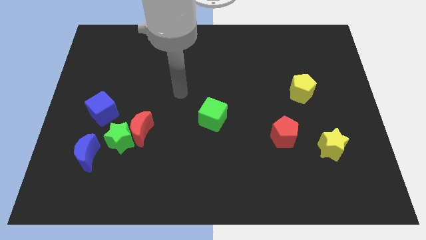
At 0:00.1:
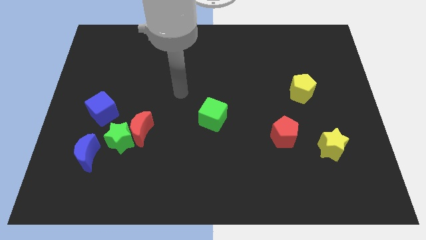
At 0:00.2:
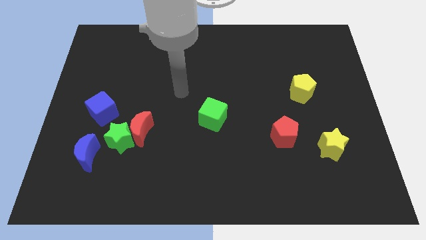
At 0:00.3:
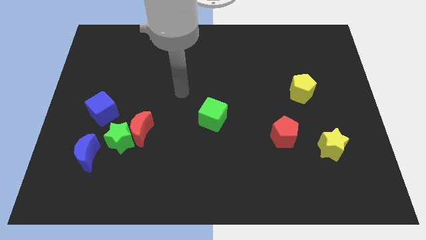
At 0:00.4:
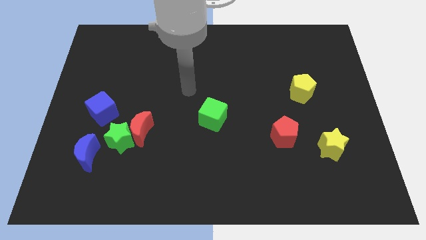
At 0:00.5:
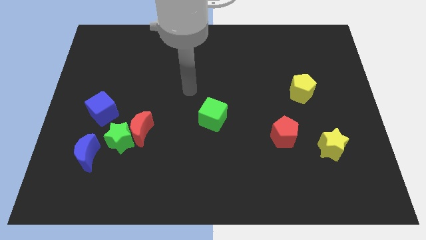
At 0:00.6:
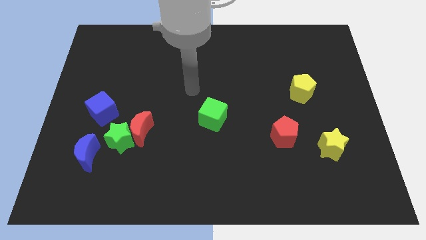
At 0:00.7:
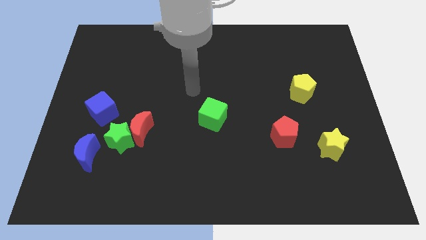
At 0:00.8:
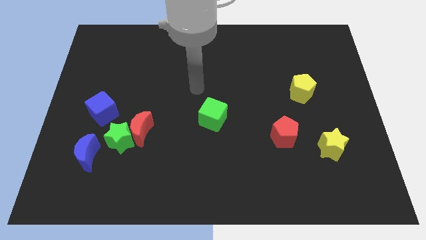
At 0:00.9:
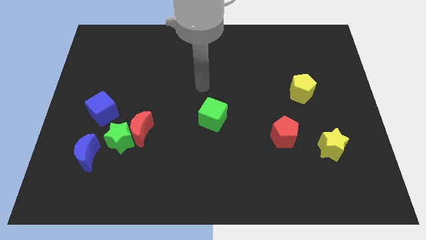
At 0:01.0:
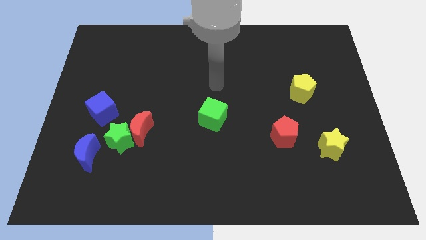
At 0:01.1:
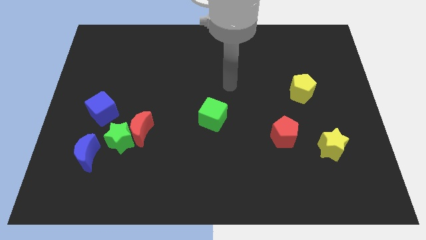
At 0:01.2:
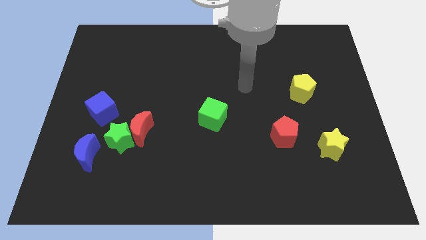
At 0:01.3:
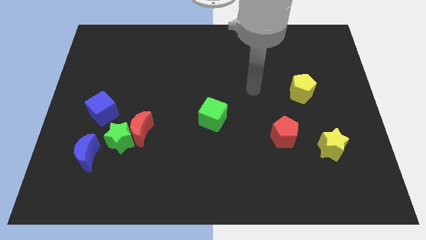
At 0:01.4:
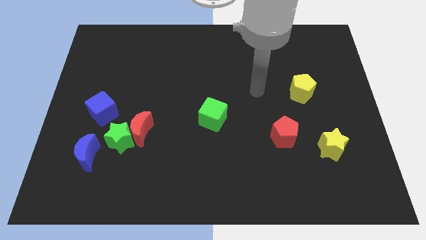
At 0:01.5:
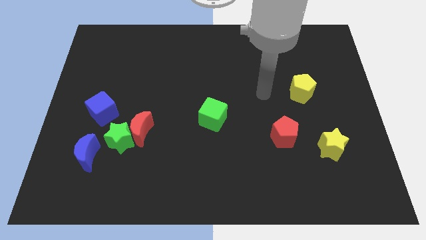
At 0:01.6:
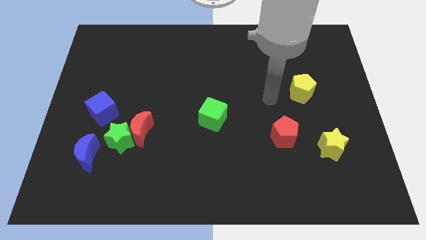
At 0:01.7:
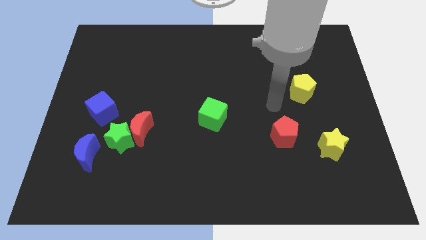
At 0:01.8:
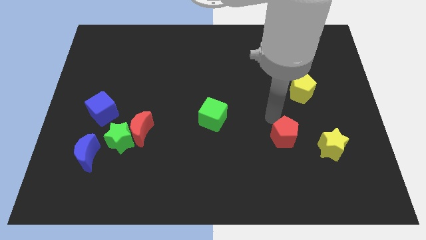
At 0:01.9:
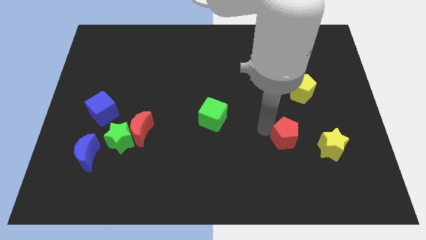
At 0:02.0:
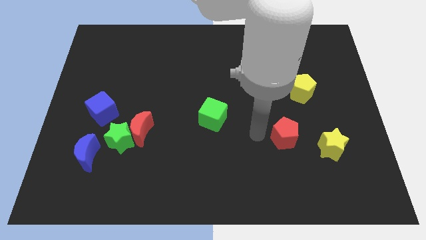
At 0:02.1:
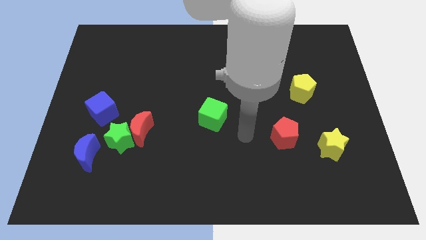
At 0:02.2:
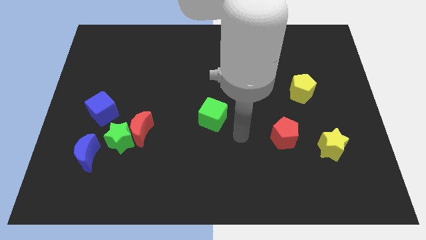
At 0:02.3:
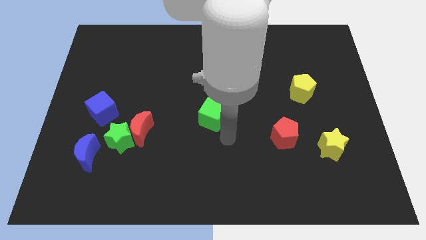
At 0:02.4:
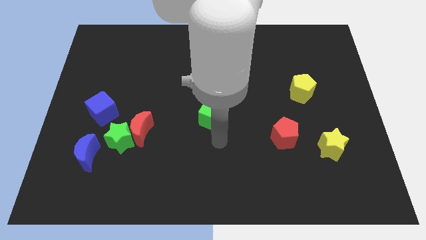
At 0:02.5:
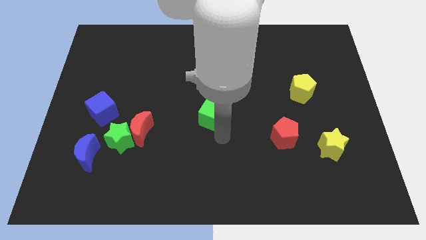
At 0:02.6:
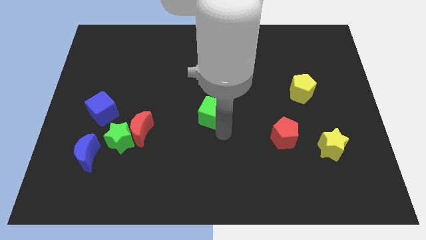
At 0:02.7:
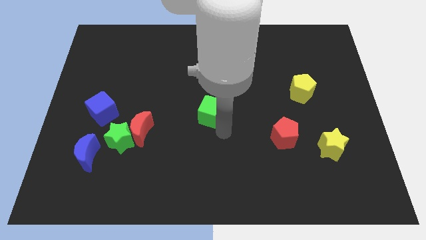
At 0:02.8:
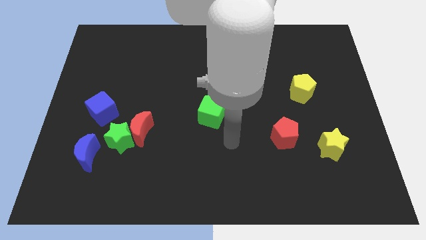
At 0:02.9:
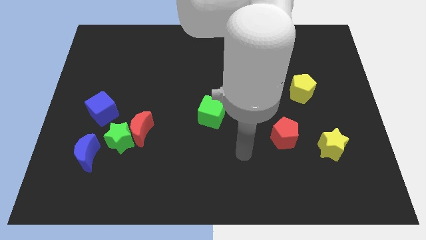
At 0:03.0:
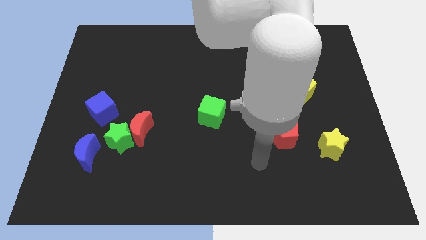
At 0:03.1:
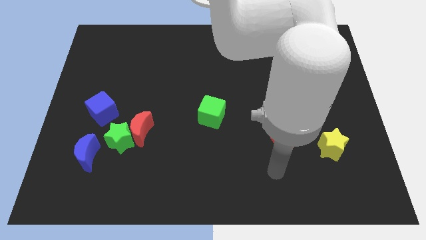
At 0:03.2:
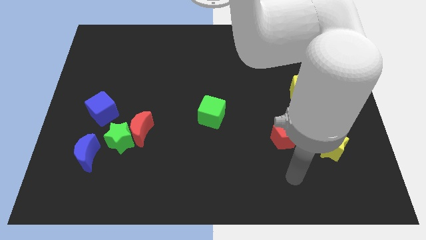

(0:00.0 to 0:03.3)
slightly move the green cube up

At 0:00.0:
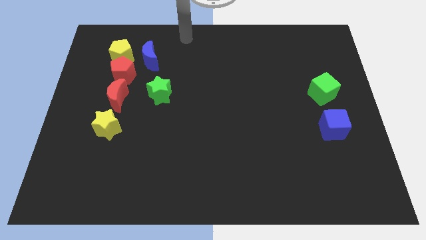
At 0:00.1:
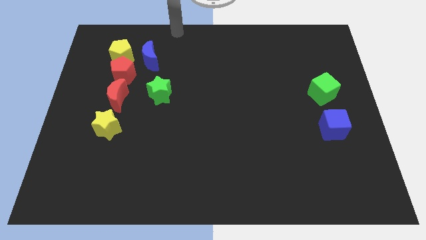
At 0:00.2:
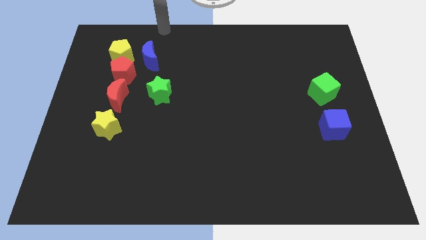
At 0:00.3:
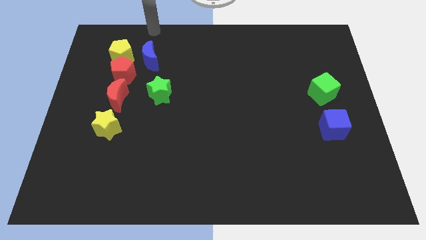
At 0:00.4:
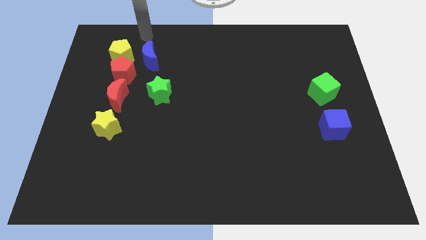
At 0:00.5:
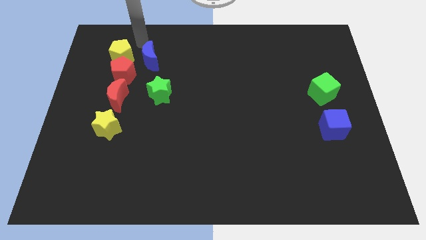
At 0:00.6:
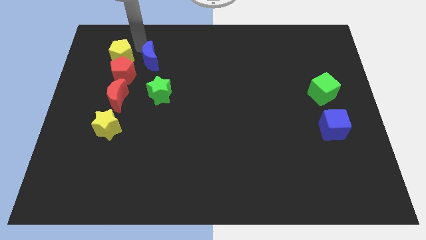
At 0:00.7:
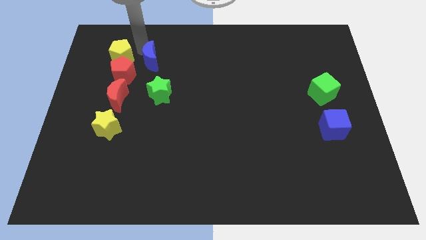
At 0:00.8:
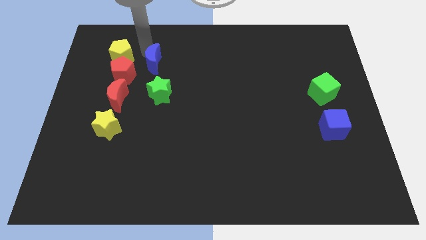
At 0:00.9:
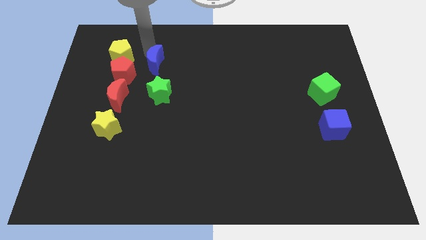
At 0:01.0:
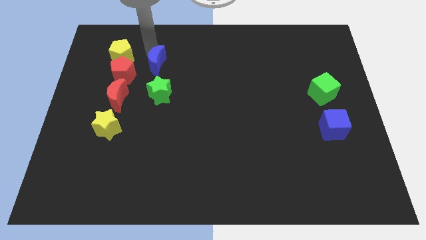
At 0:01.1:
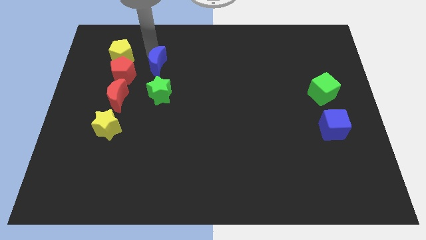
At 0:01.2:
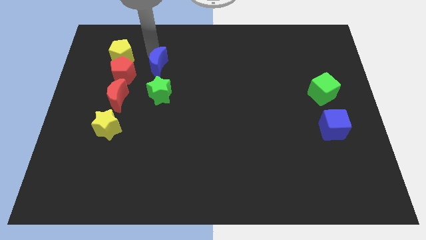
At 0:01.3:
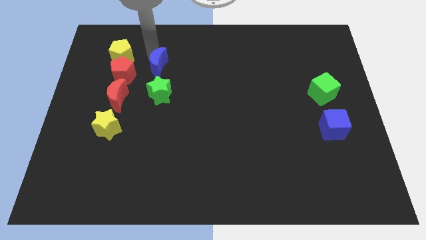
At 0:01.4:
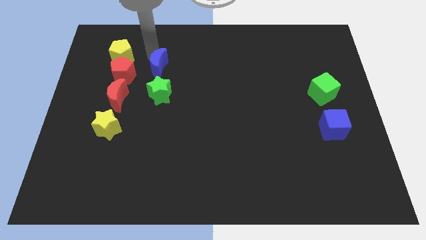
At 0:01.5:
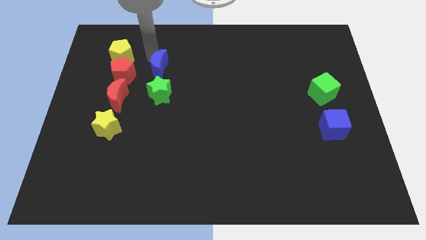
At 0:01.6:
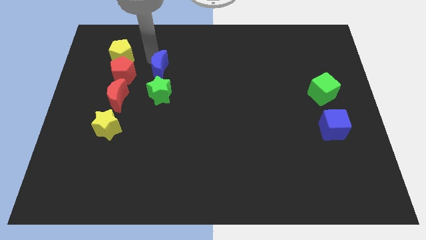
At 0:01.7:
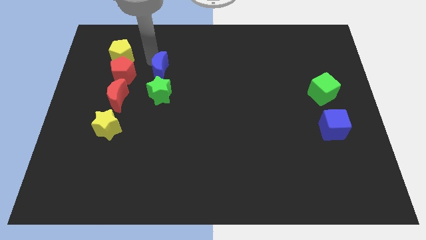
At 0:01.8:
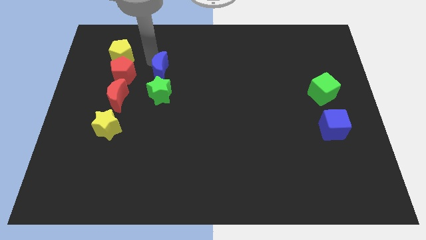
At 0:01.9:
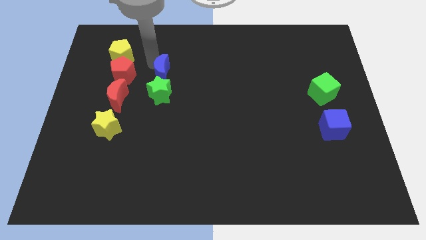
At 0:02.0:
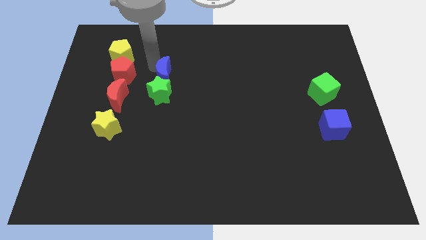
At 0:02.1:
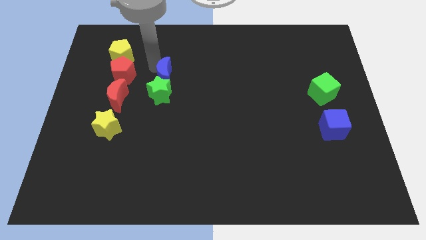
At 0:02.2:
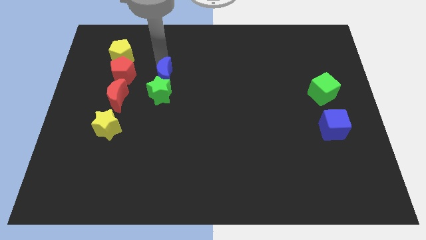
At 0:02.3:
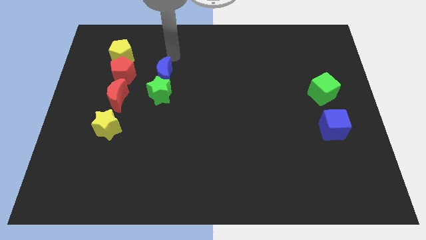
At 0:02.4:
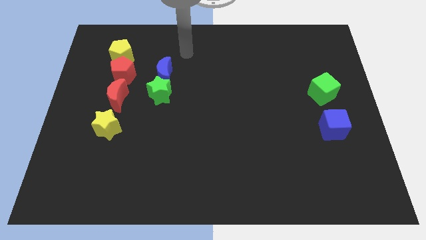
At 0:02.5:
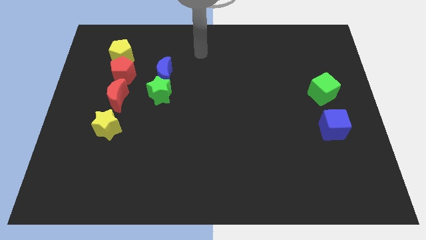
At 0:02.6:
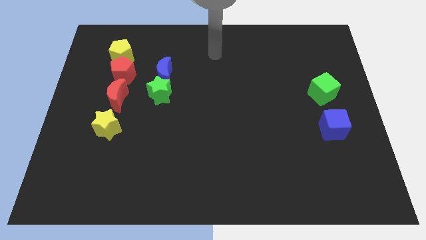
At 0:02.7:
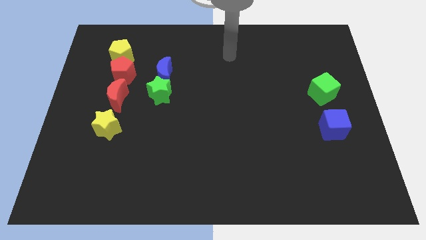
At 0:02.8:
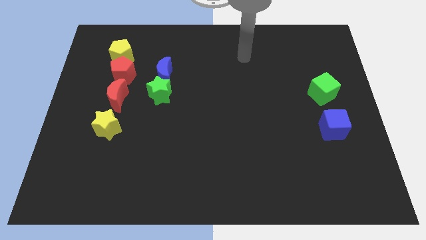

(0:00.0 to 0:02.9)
bring blue moon closer to green star

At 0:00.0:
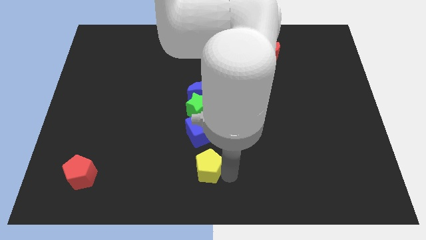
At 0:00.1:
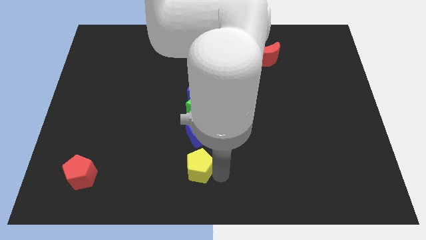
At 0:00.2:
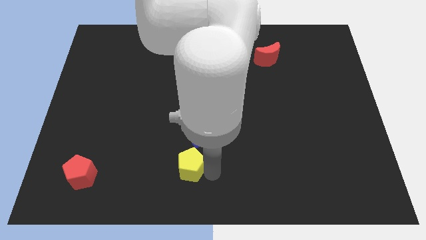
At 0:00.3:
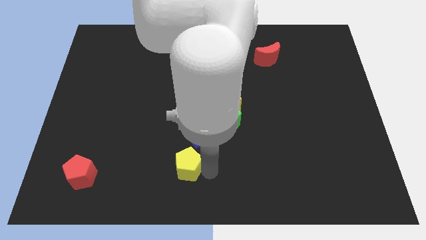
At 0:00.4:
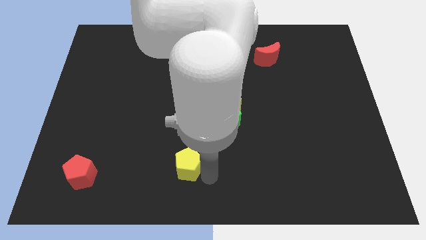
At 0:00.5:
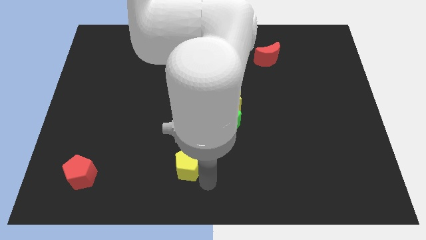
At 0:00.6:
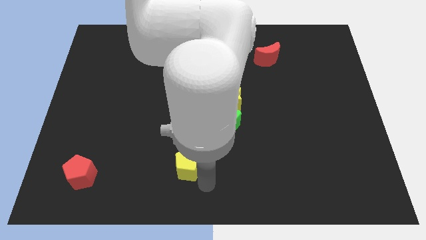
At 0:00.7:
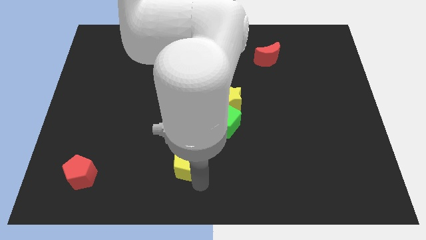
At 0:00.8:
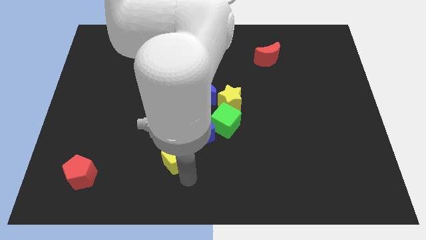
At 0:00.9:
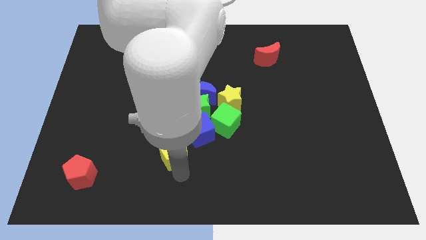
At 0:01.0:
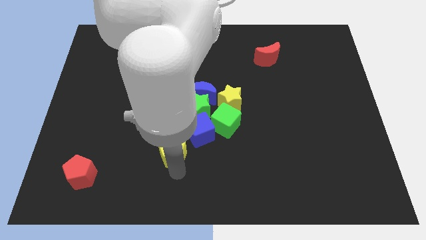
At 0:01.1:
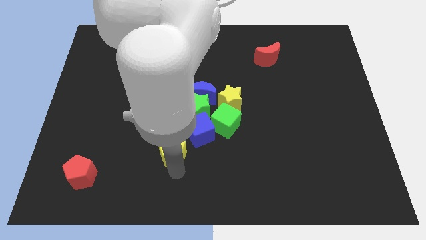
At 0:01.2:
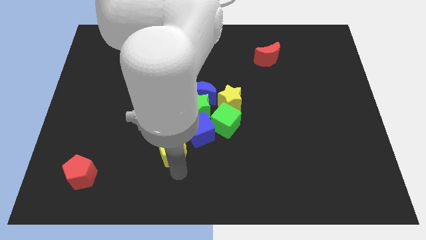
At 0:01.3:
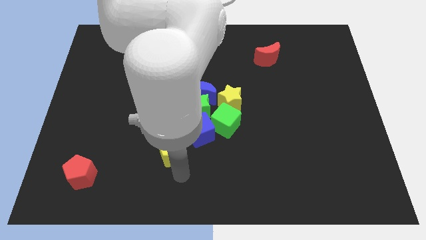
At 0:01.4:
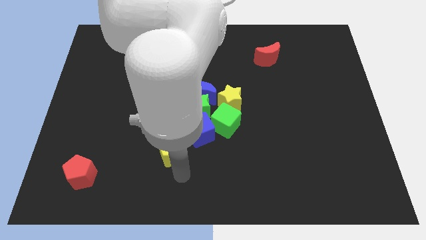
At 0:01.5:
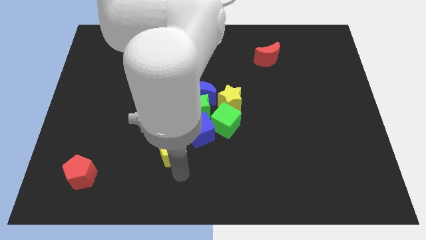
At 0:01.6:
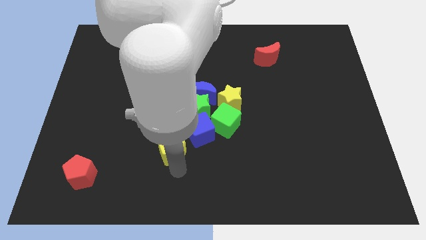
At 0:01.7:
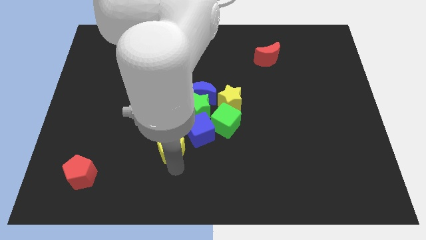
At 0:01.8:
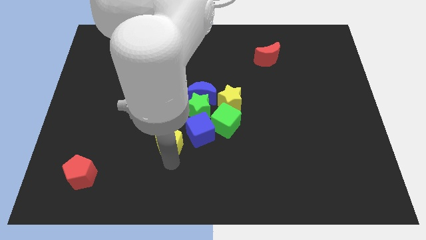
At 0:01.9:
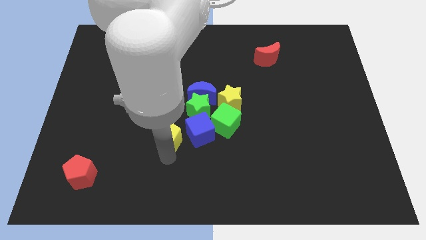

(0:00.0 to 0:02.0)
push the yellow pentagon towards the left of the blue cube

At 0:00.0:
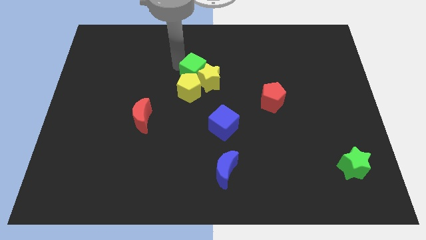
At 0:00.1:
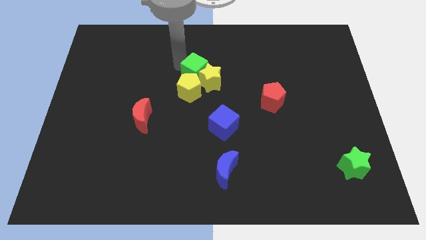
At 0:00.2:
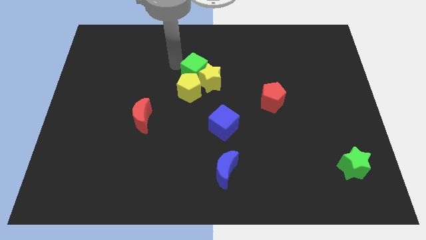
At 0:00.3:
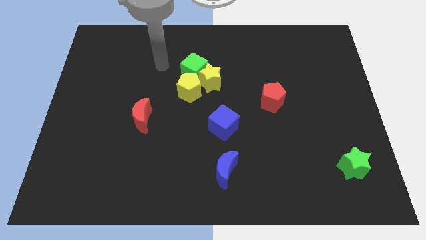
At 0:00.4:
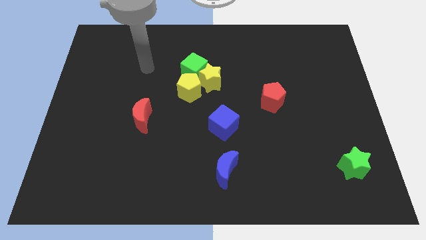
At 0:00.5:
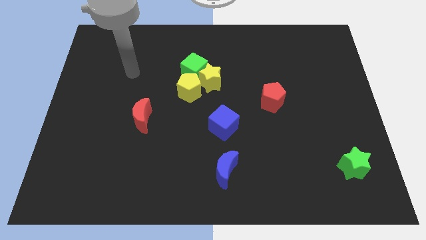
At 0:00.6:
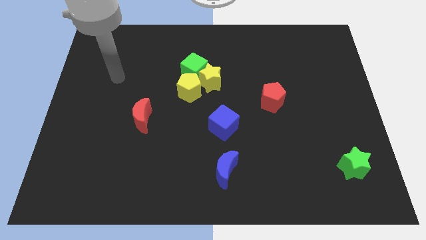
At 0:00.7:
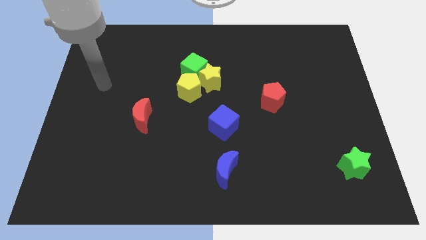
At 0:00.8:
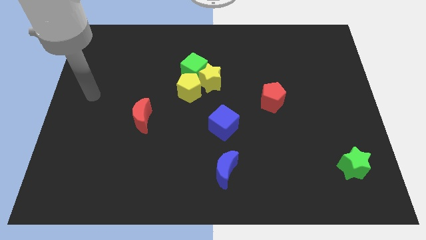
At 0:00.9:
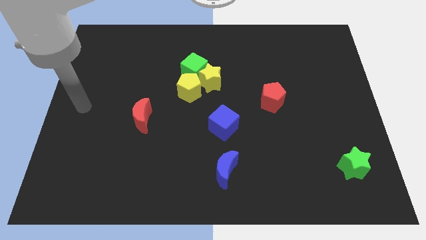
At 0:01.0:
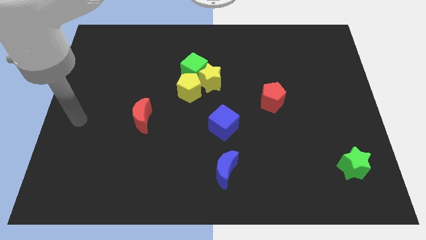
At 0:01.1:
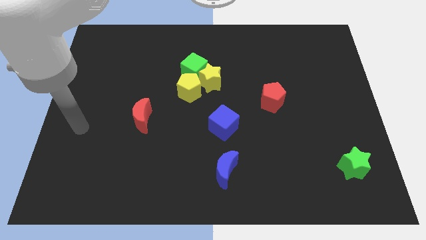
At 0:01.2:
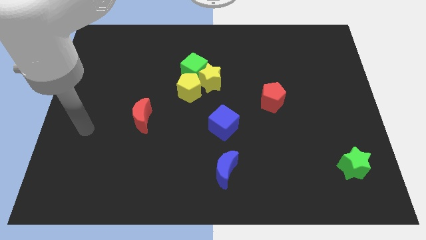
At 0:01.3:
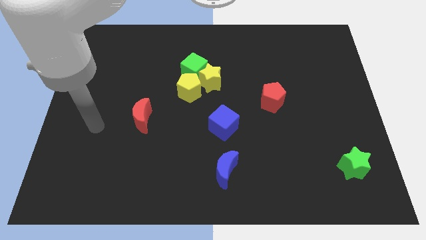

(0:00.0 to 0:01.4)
drag your hand away from the green cube
